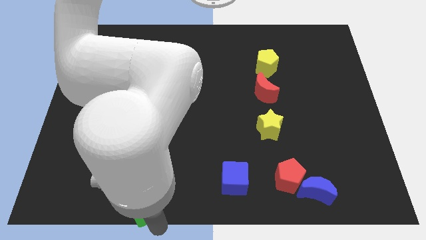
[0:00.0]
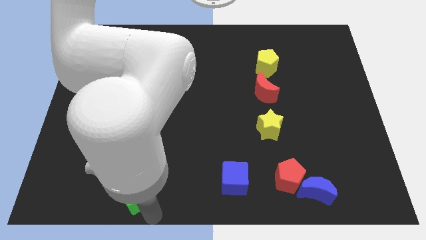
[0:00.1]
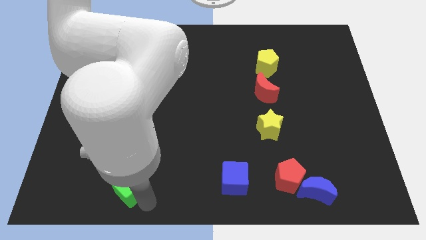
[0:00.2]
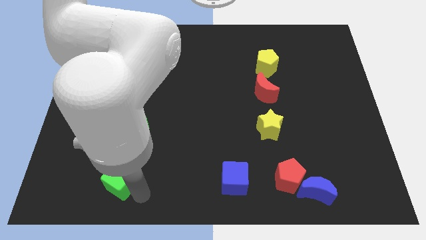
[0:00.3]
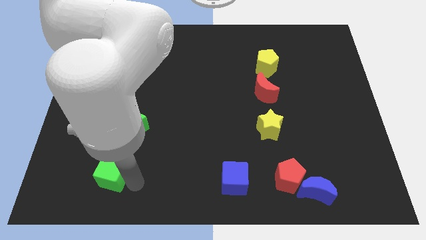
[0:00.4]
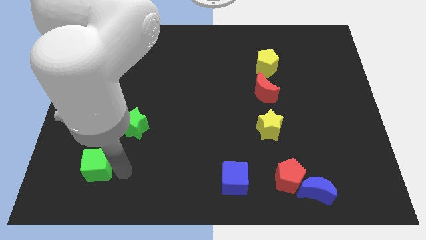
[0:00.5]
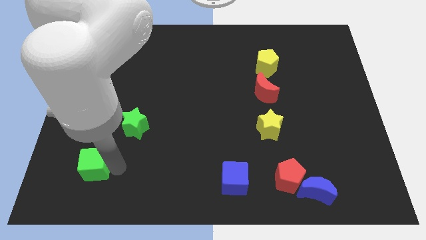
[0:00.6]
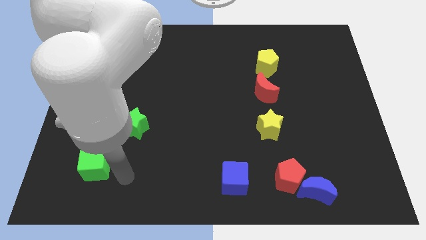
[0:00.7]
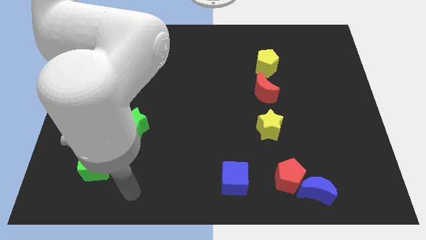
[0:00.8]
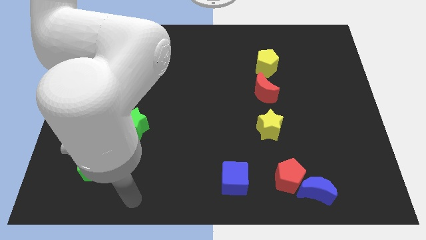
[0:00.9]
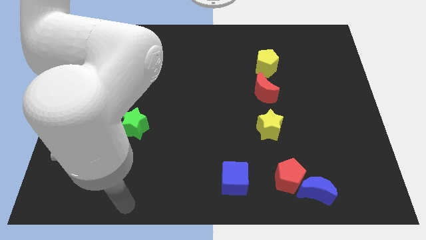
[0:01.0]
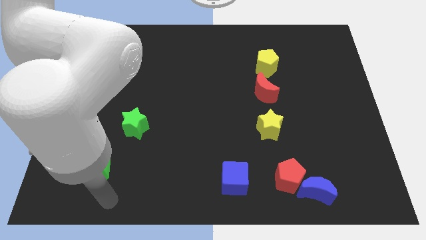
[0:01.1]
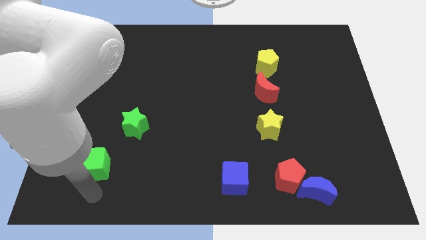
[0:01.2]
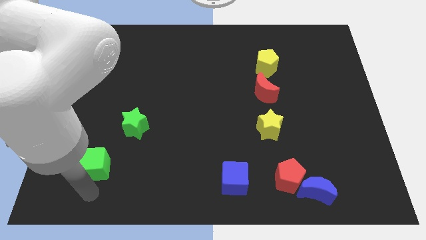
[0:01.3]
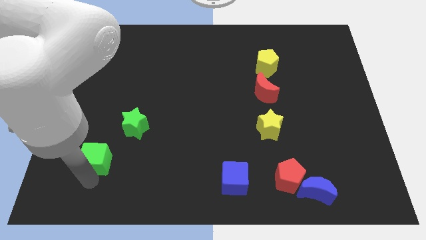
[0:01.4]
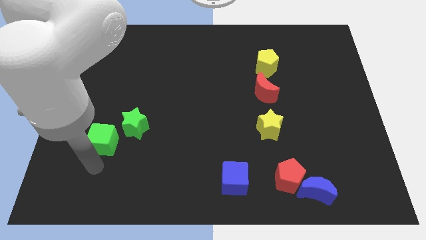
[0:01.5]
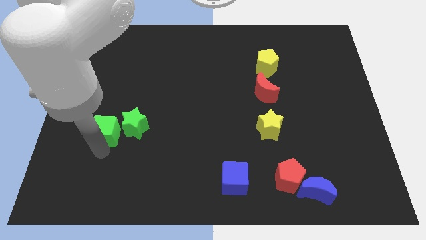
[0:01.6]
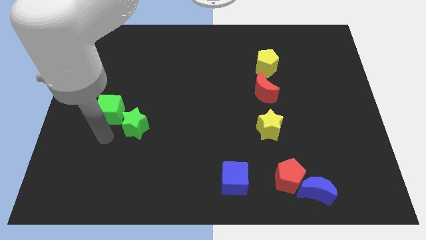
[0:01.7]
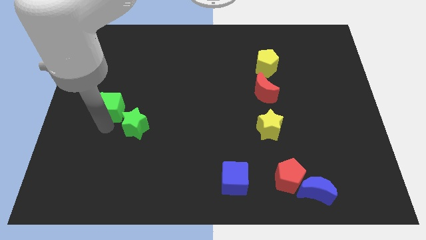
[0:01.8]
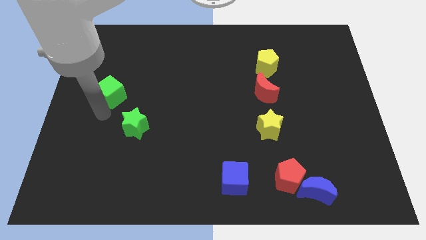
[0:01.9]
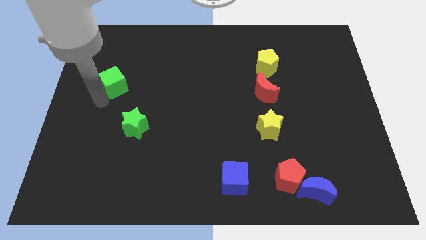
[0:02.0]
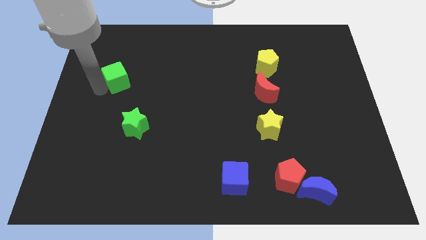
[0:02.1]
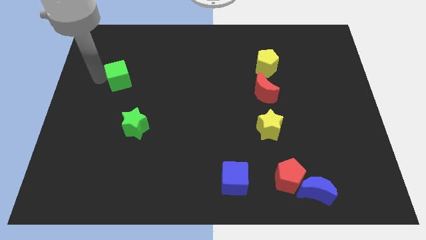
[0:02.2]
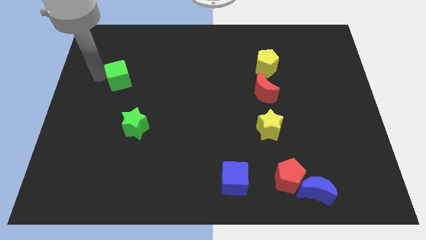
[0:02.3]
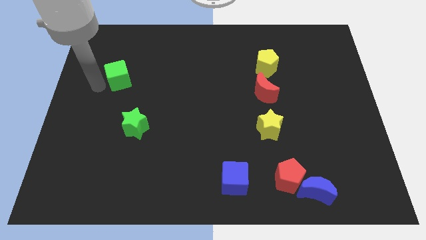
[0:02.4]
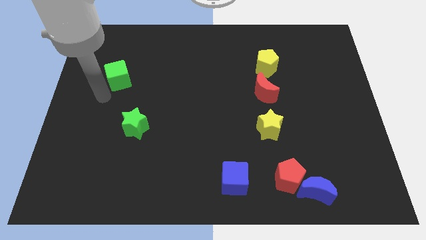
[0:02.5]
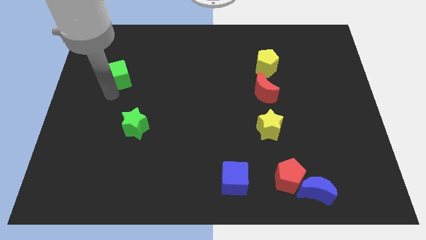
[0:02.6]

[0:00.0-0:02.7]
push green block towards the top left of the board

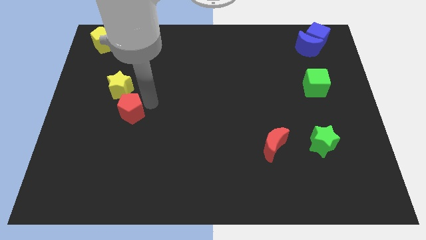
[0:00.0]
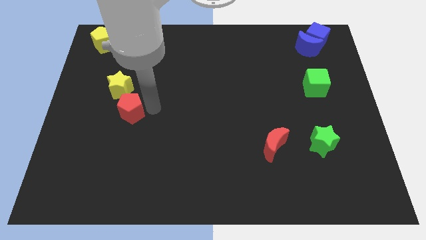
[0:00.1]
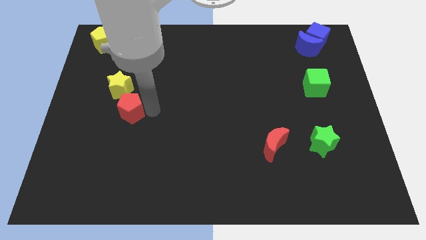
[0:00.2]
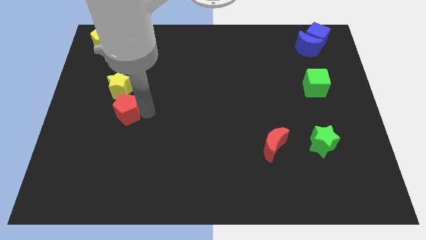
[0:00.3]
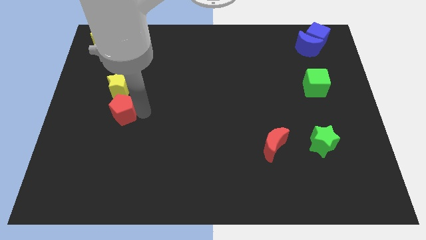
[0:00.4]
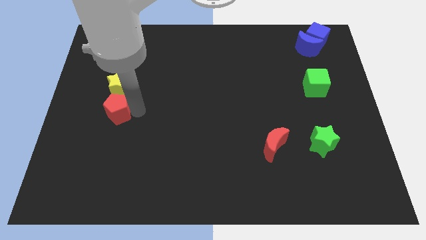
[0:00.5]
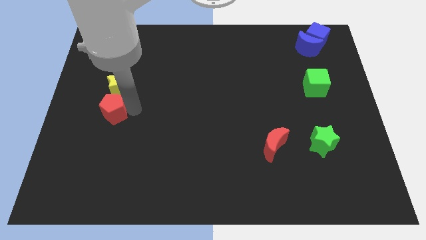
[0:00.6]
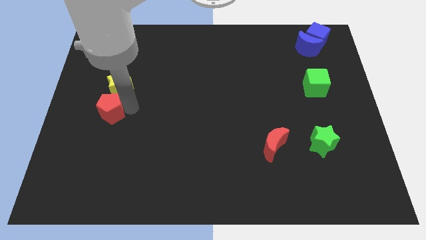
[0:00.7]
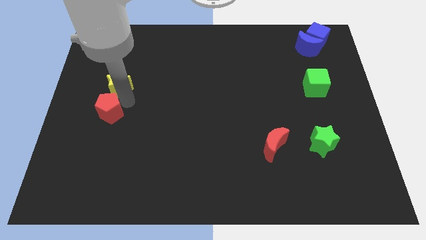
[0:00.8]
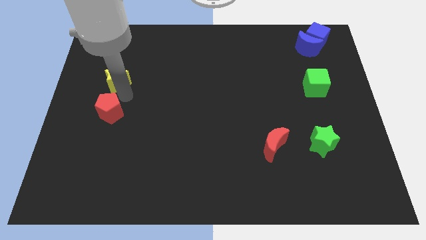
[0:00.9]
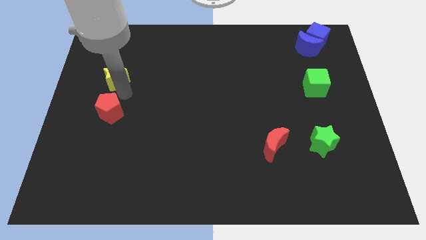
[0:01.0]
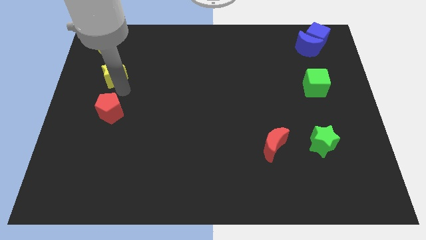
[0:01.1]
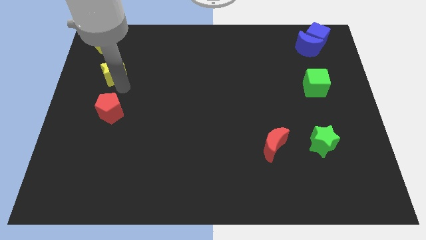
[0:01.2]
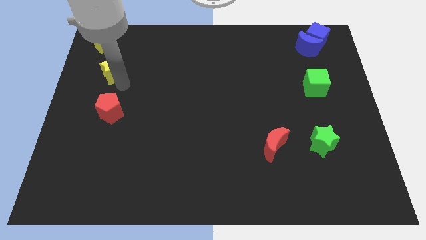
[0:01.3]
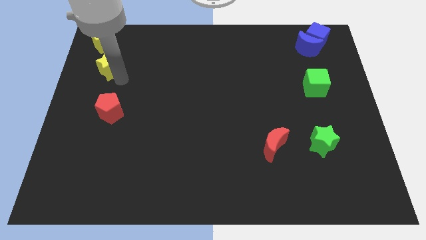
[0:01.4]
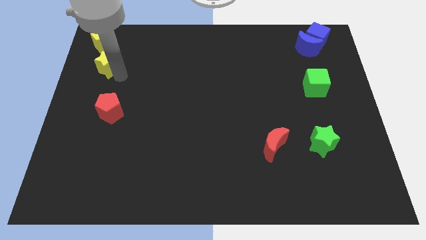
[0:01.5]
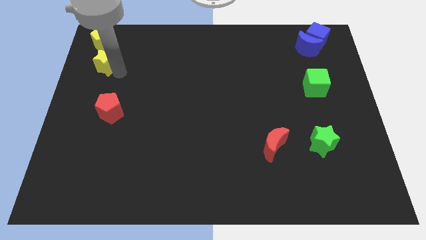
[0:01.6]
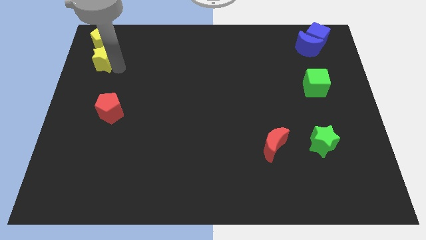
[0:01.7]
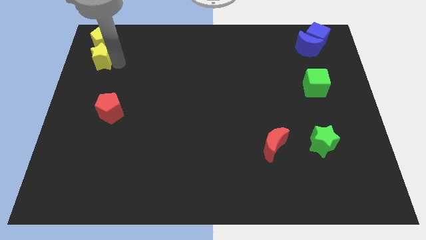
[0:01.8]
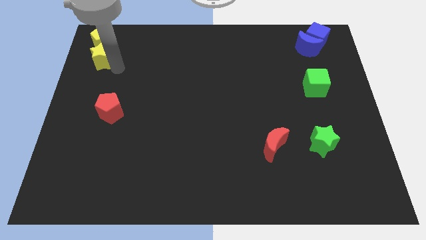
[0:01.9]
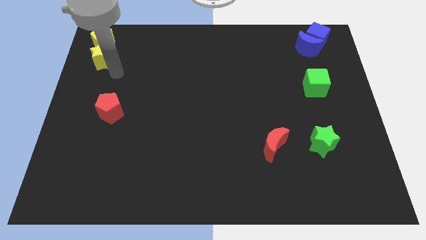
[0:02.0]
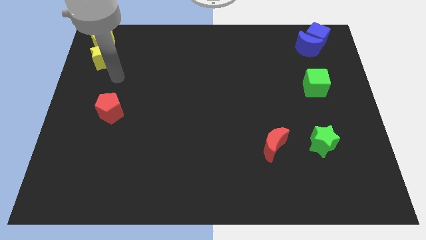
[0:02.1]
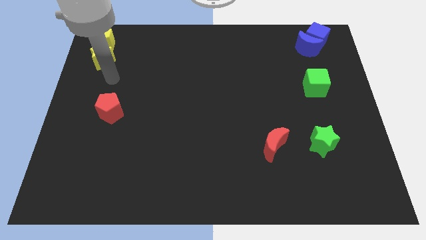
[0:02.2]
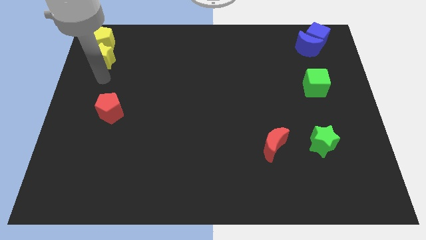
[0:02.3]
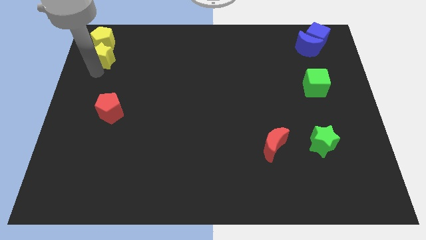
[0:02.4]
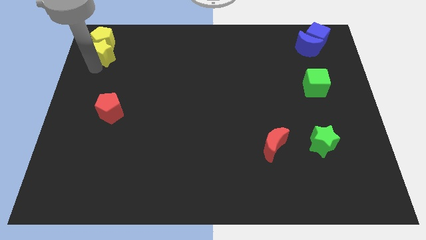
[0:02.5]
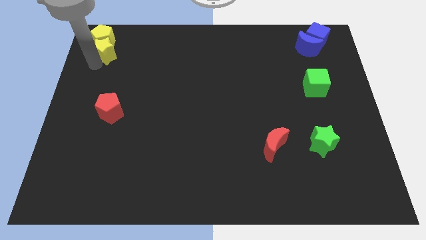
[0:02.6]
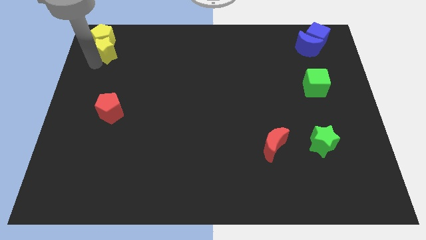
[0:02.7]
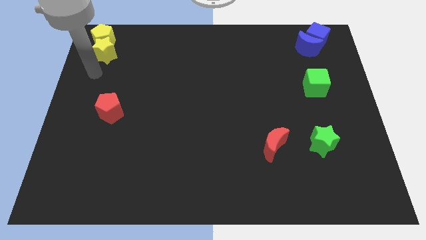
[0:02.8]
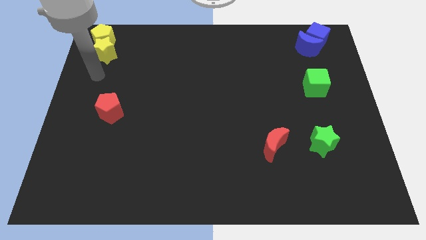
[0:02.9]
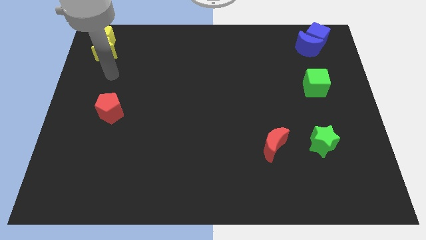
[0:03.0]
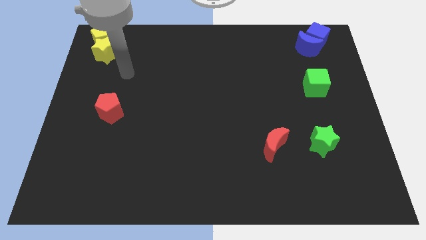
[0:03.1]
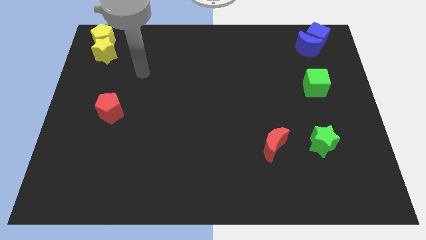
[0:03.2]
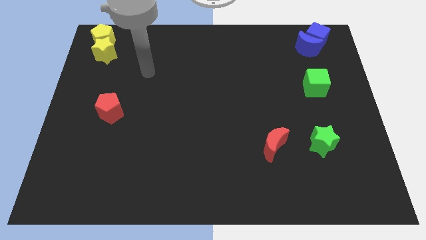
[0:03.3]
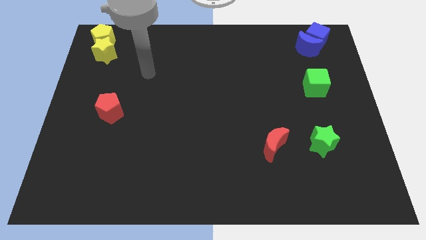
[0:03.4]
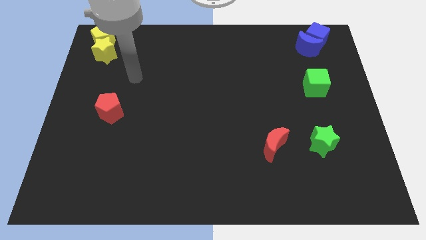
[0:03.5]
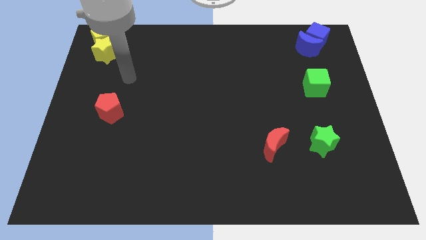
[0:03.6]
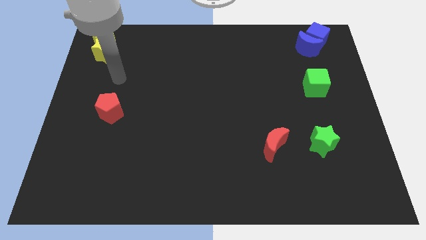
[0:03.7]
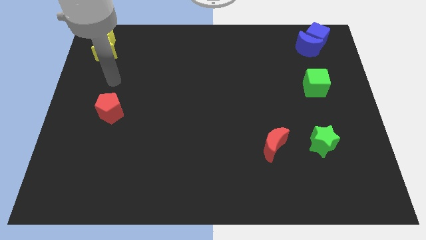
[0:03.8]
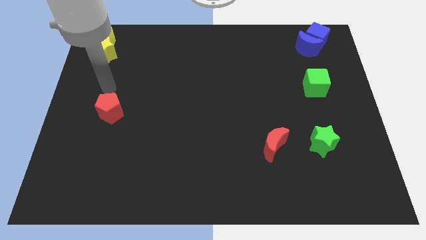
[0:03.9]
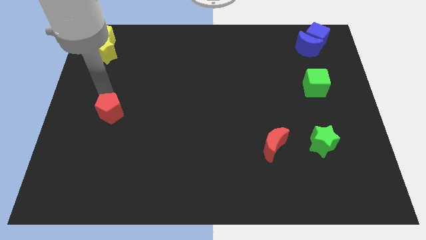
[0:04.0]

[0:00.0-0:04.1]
add yellow star into yellow pentagon

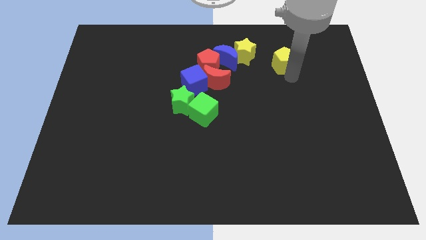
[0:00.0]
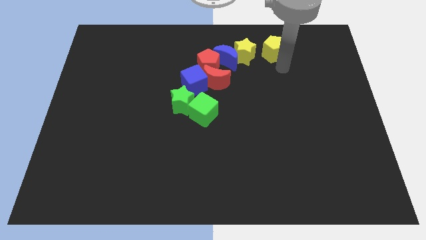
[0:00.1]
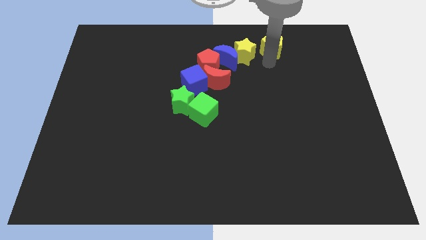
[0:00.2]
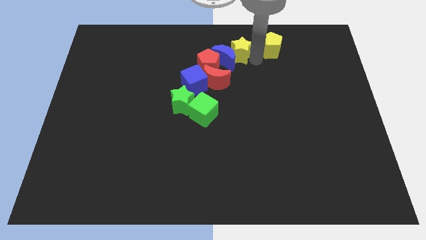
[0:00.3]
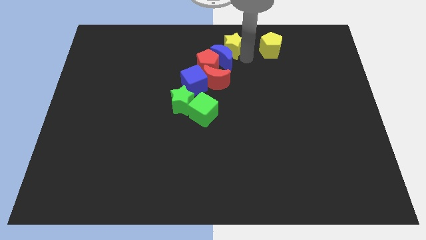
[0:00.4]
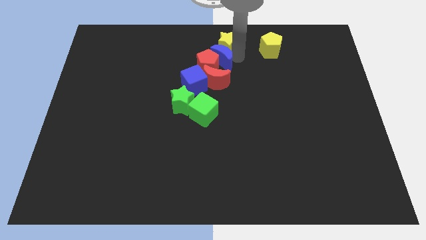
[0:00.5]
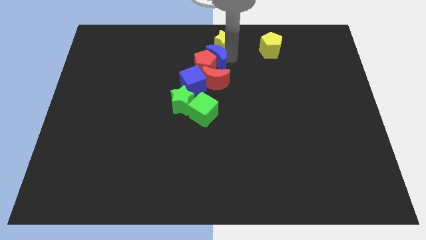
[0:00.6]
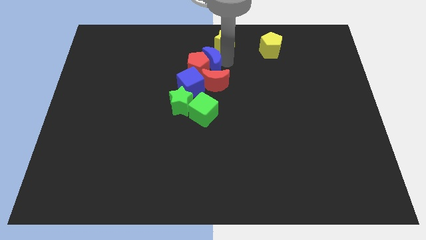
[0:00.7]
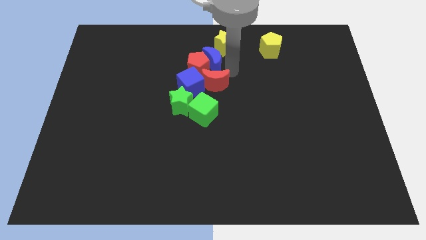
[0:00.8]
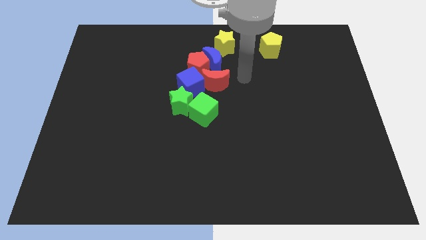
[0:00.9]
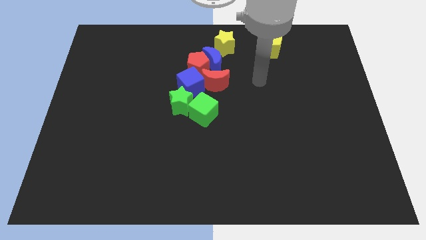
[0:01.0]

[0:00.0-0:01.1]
push yellow pentagon towards top center

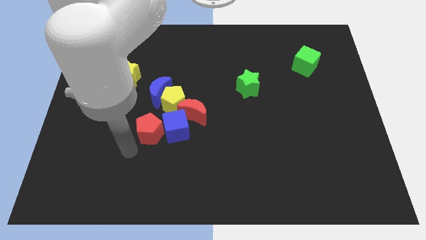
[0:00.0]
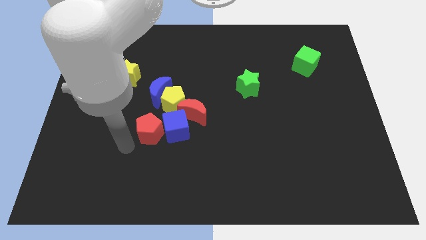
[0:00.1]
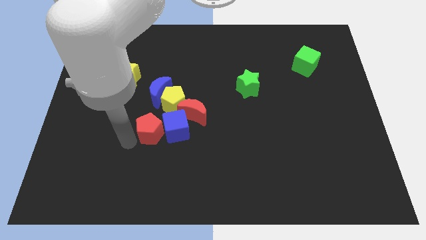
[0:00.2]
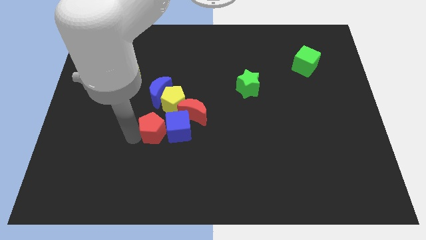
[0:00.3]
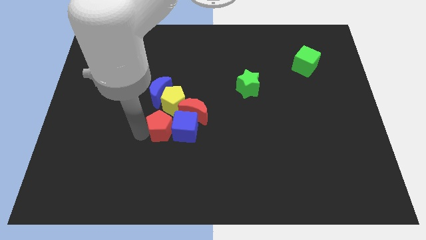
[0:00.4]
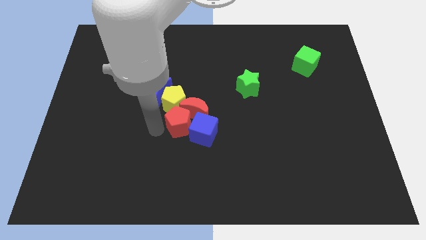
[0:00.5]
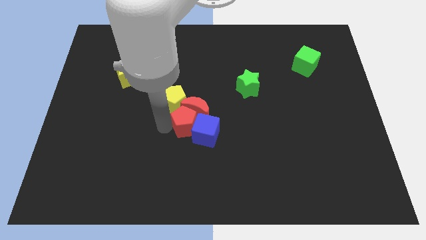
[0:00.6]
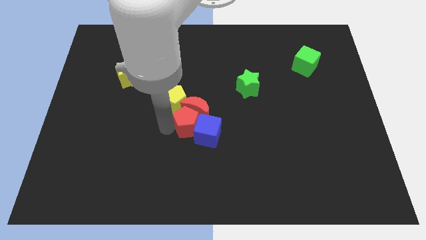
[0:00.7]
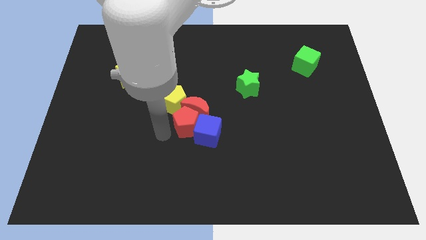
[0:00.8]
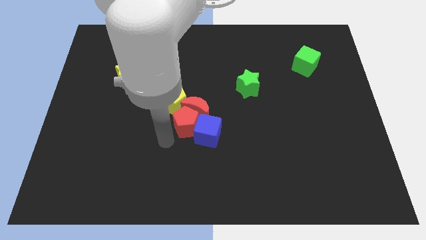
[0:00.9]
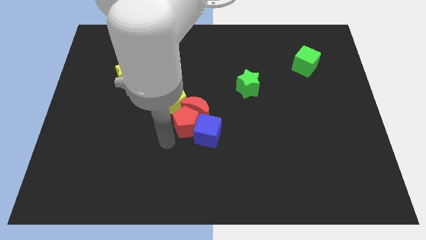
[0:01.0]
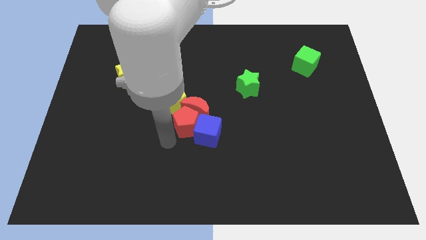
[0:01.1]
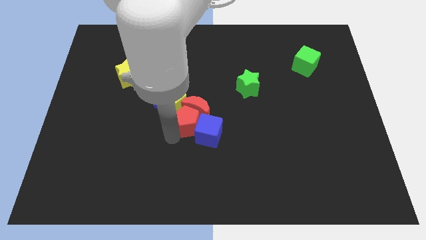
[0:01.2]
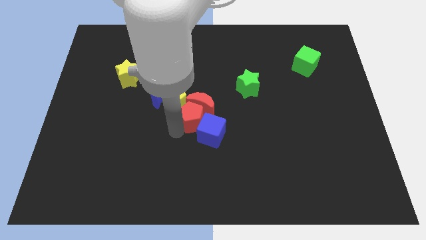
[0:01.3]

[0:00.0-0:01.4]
place red pentagon to the bottom of the red moon
